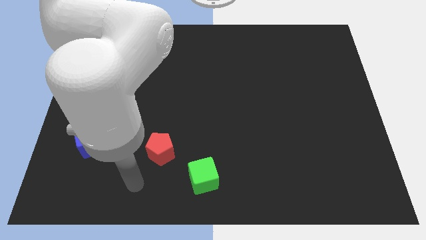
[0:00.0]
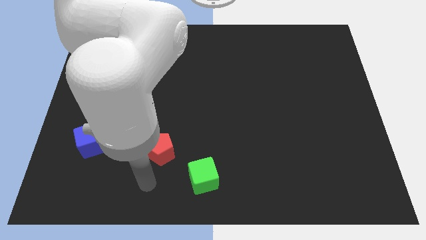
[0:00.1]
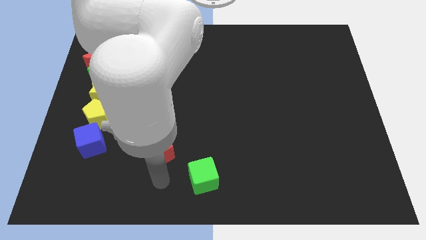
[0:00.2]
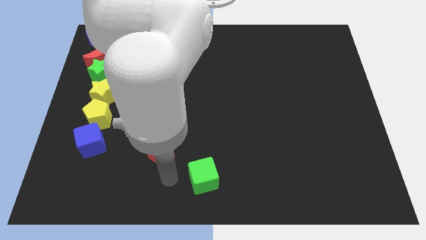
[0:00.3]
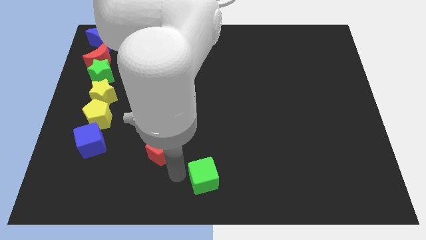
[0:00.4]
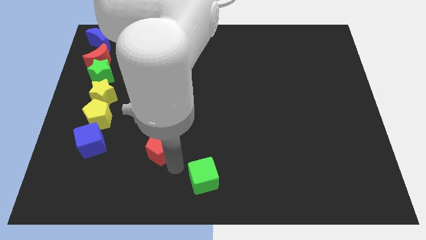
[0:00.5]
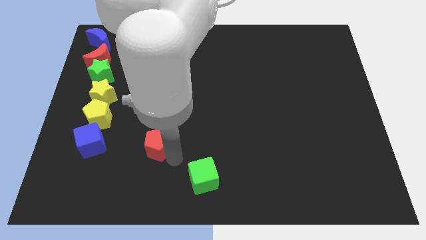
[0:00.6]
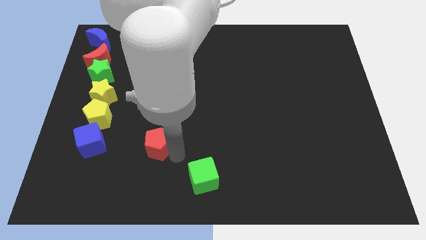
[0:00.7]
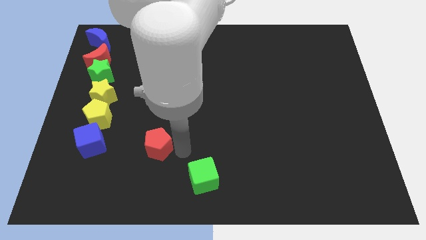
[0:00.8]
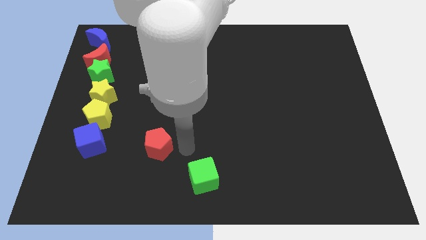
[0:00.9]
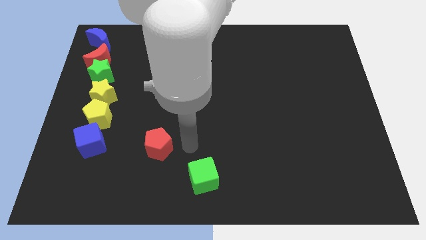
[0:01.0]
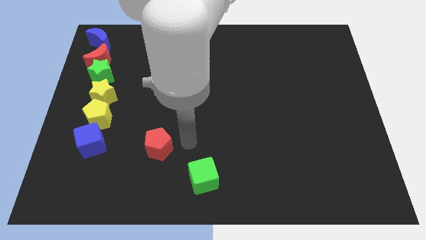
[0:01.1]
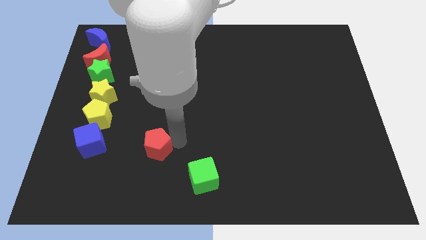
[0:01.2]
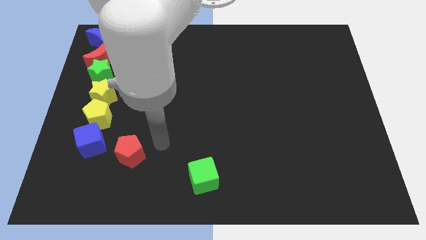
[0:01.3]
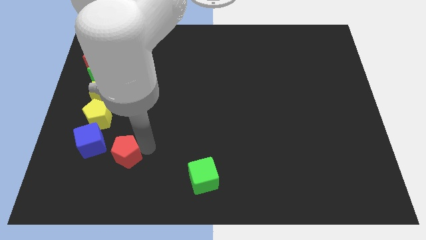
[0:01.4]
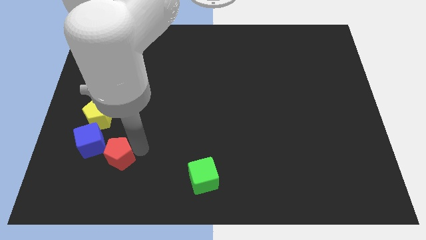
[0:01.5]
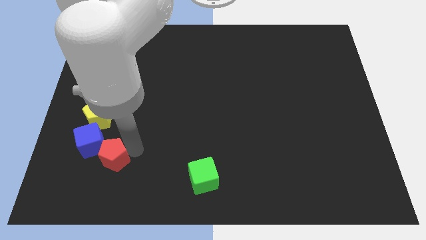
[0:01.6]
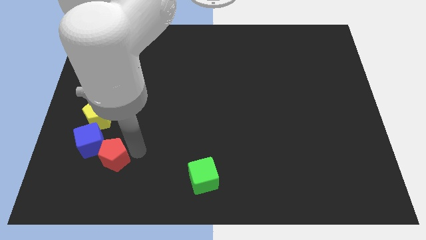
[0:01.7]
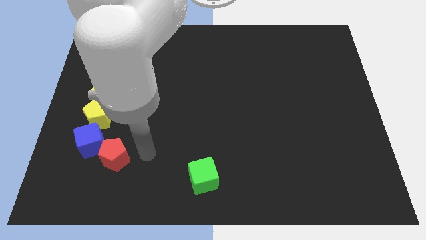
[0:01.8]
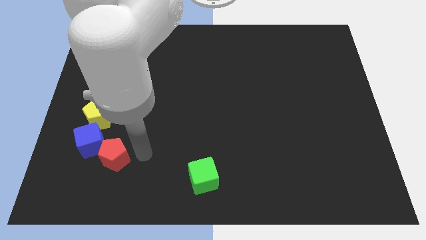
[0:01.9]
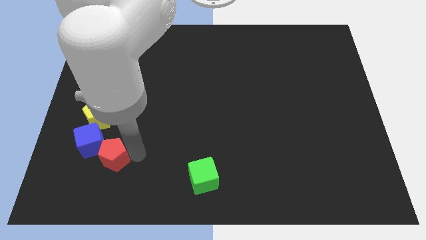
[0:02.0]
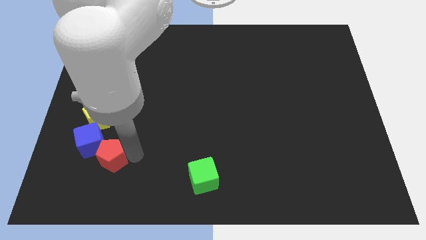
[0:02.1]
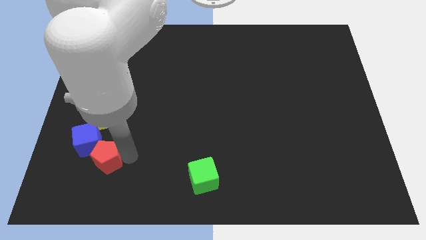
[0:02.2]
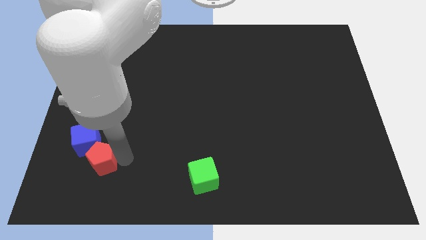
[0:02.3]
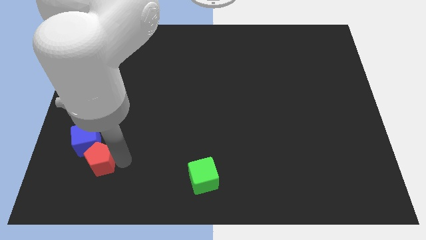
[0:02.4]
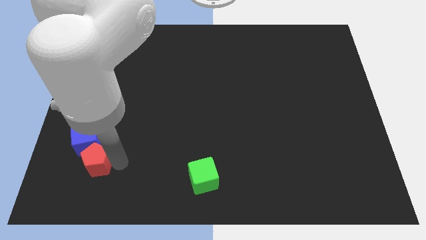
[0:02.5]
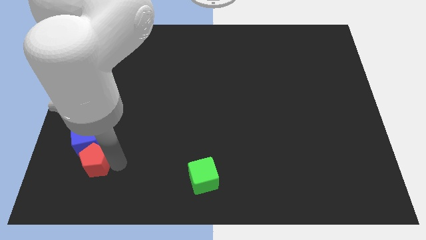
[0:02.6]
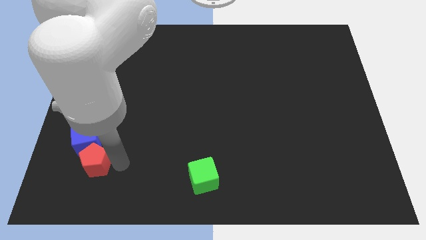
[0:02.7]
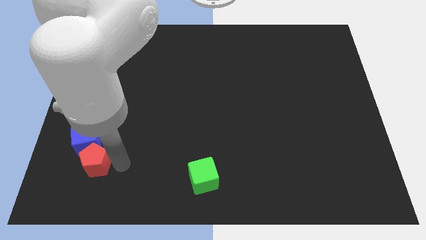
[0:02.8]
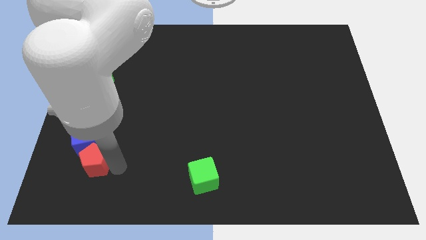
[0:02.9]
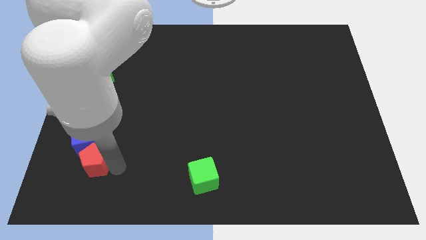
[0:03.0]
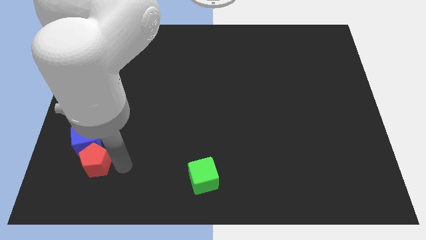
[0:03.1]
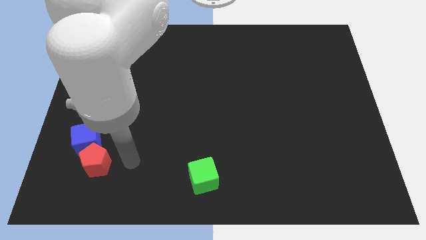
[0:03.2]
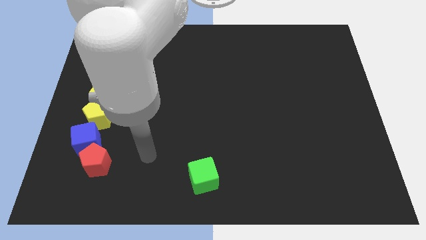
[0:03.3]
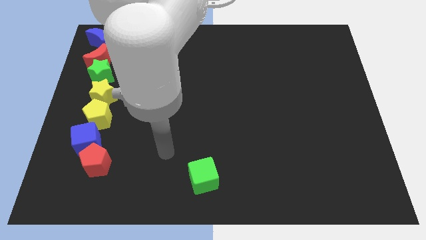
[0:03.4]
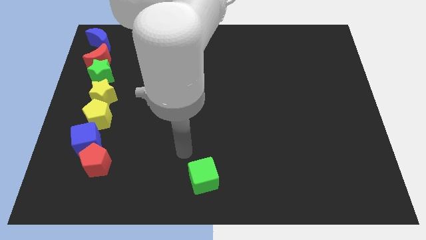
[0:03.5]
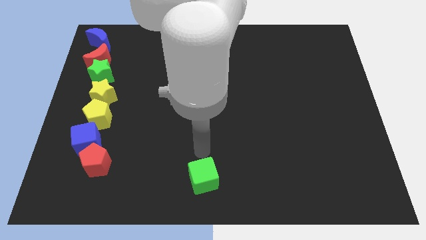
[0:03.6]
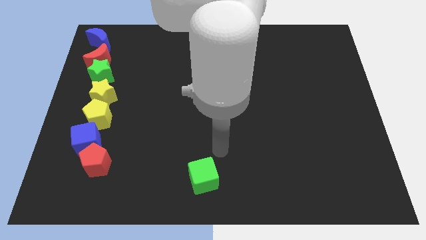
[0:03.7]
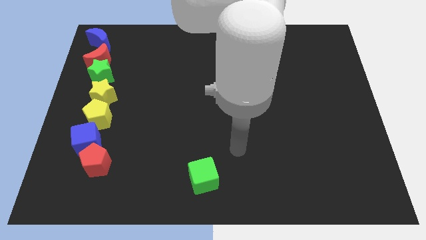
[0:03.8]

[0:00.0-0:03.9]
push the red pentagon below blue cube

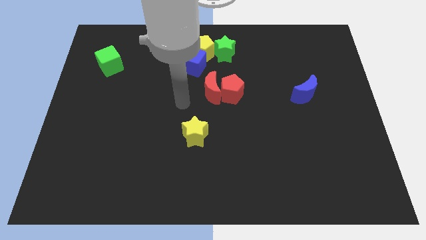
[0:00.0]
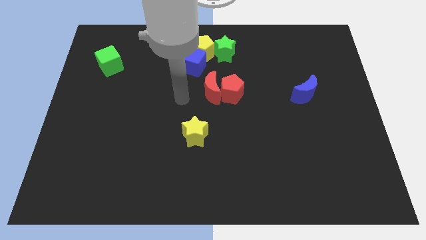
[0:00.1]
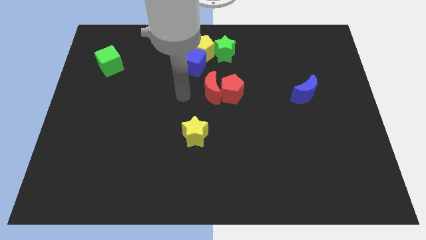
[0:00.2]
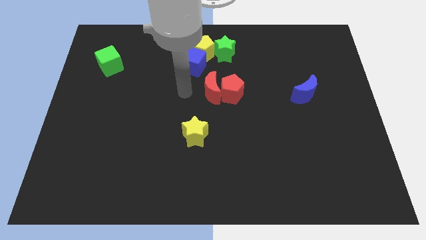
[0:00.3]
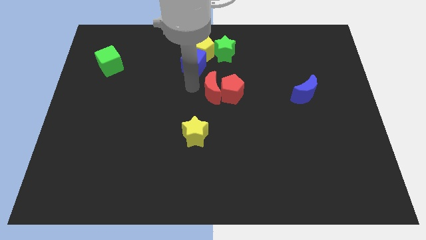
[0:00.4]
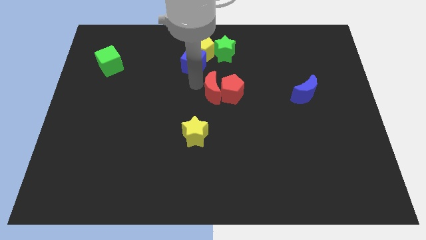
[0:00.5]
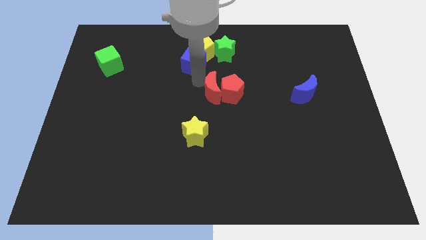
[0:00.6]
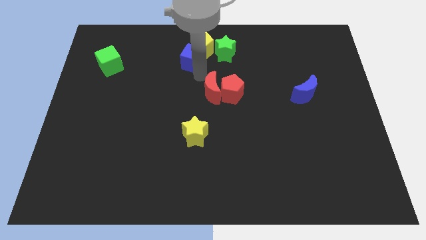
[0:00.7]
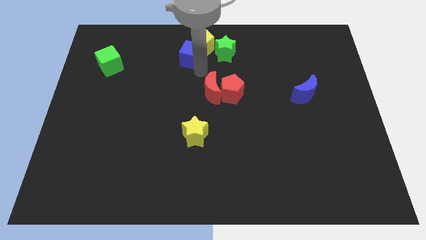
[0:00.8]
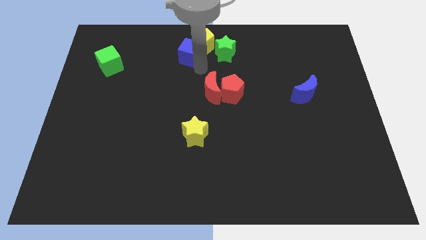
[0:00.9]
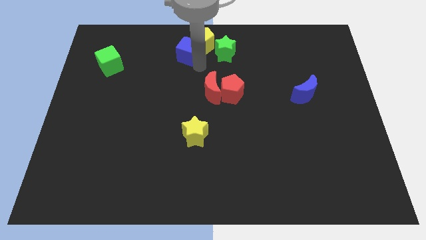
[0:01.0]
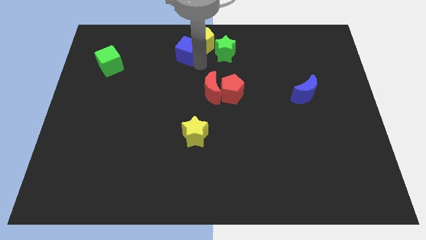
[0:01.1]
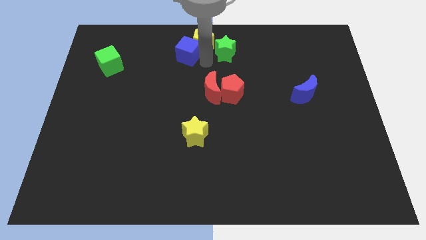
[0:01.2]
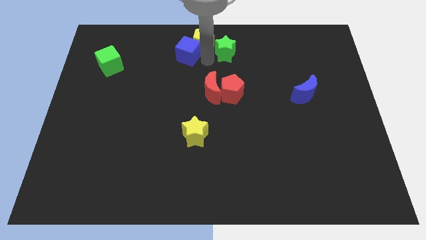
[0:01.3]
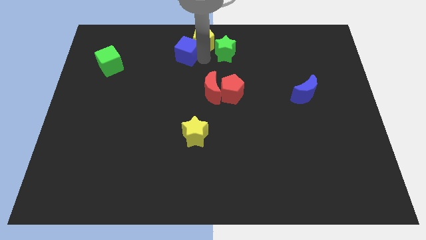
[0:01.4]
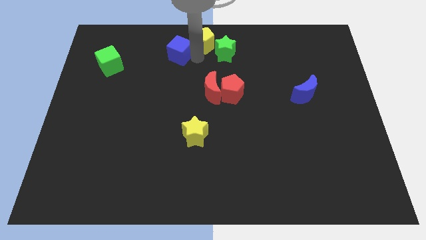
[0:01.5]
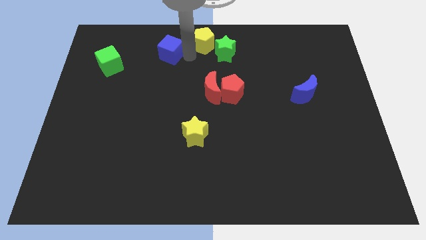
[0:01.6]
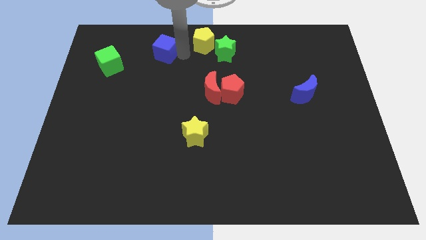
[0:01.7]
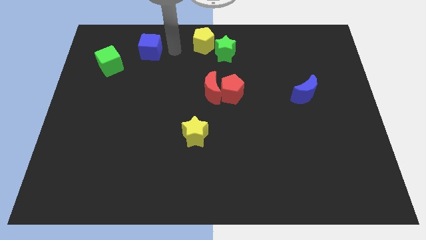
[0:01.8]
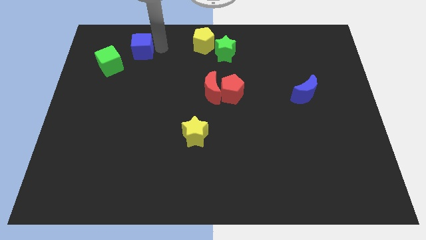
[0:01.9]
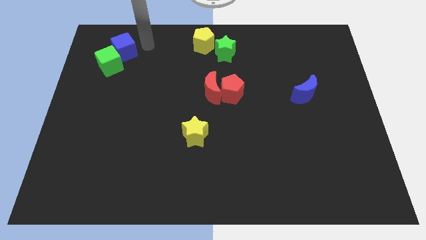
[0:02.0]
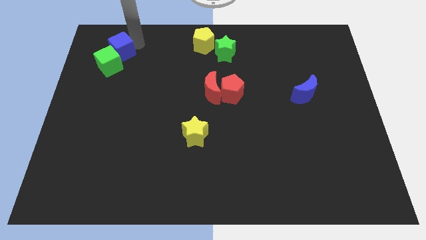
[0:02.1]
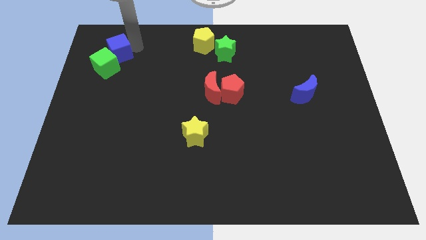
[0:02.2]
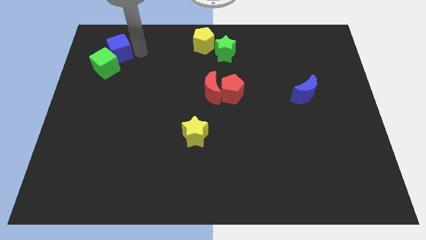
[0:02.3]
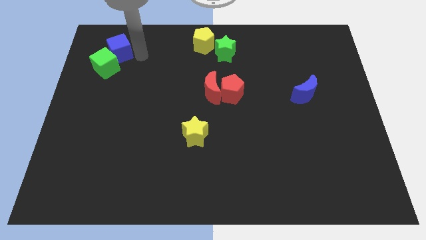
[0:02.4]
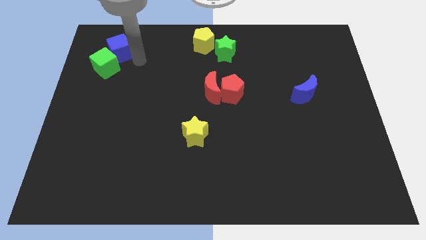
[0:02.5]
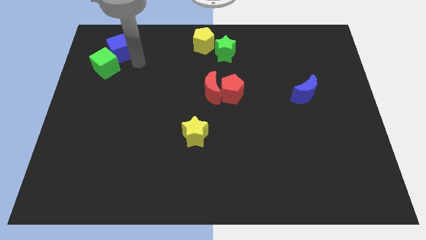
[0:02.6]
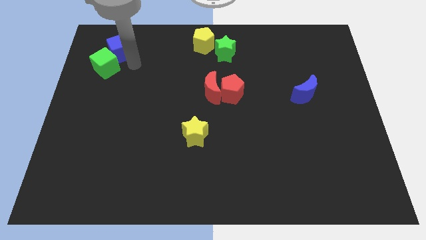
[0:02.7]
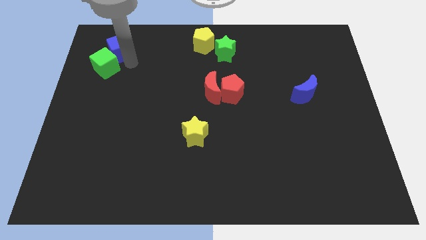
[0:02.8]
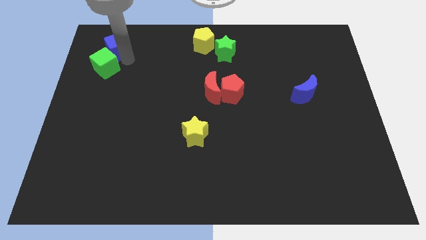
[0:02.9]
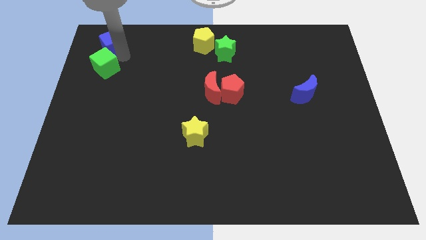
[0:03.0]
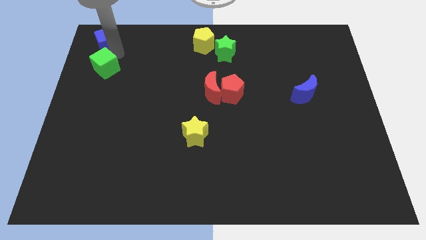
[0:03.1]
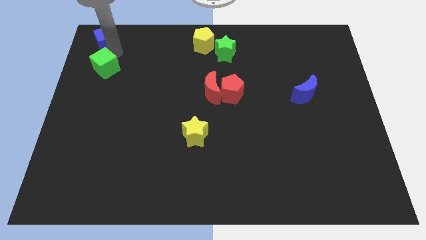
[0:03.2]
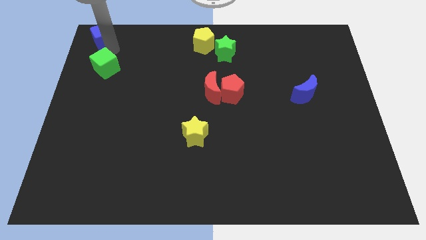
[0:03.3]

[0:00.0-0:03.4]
move the blue cube to the top of the green cube

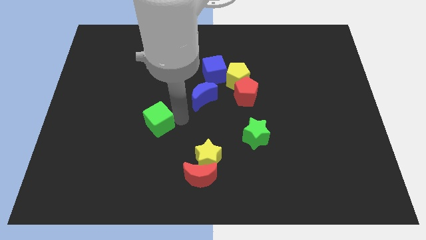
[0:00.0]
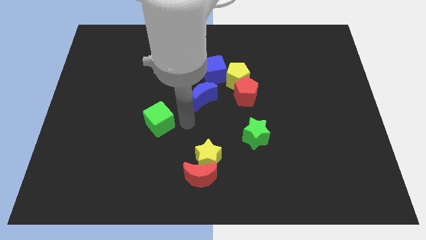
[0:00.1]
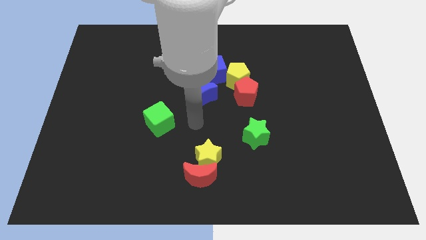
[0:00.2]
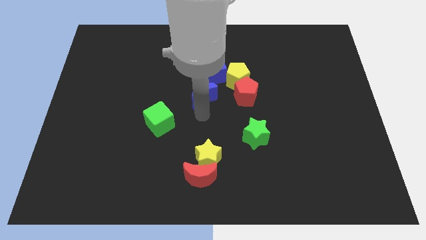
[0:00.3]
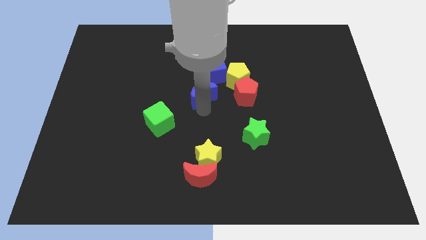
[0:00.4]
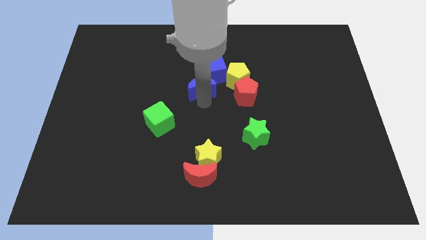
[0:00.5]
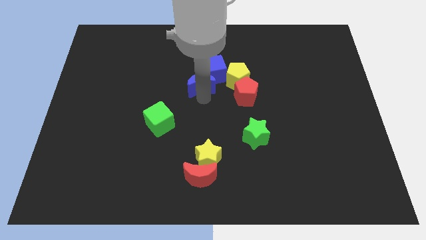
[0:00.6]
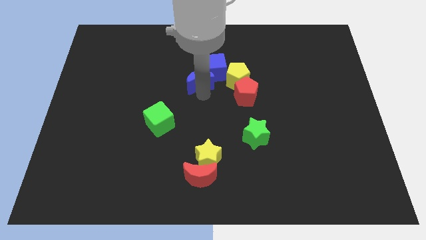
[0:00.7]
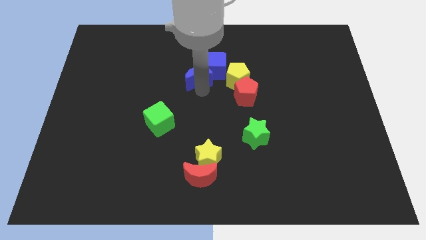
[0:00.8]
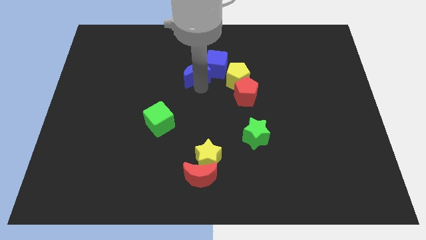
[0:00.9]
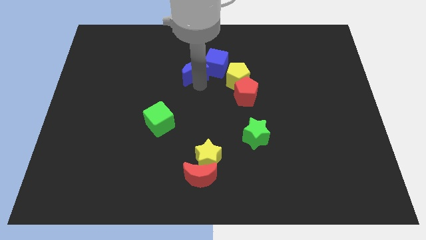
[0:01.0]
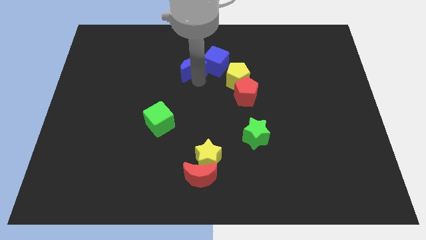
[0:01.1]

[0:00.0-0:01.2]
push the blue moon into the blue cube

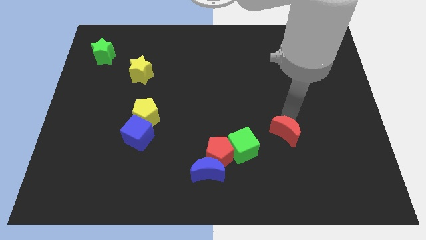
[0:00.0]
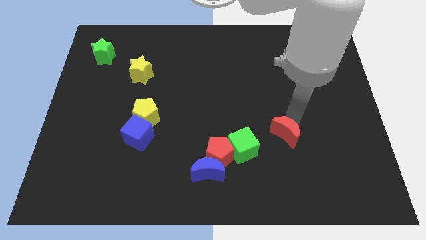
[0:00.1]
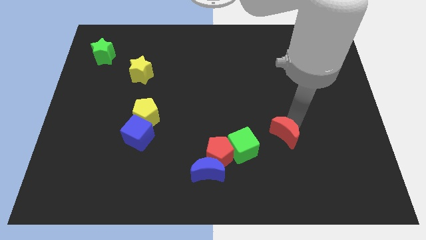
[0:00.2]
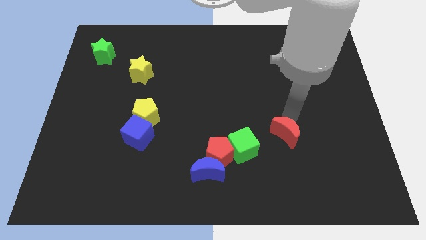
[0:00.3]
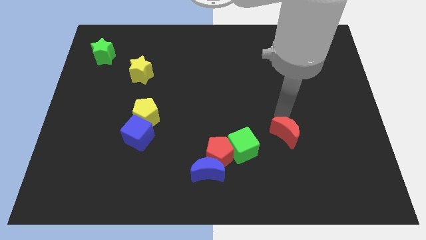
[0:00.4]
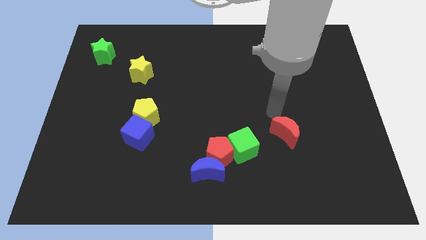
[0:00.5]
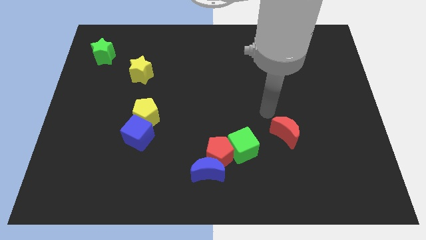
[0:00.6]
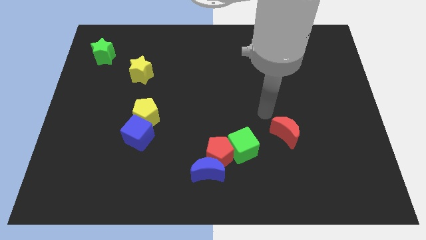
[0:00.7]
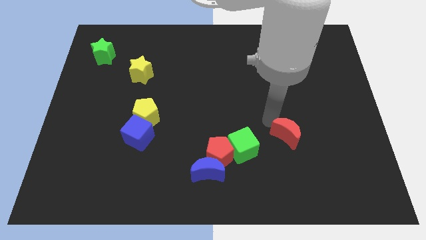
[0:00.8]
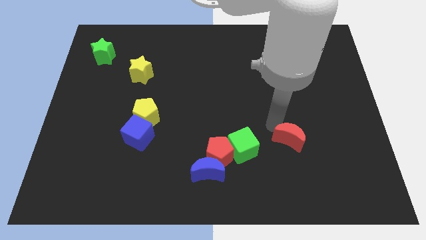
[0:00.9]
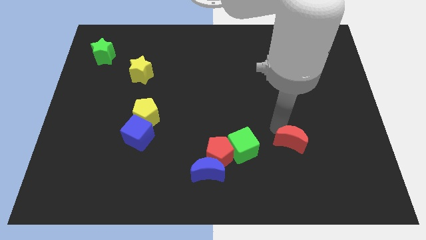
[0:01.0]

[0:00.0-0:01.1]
push the red crescent right to the green cube
